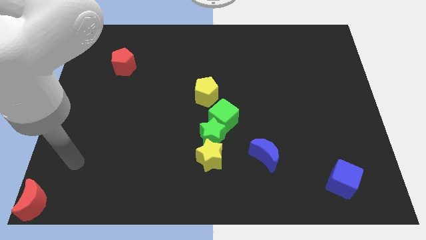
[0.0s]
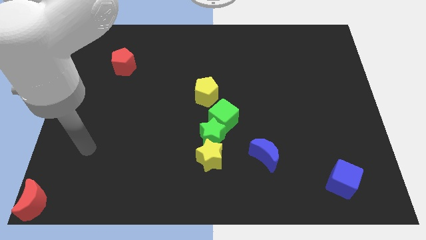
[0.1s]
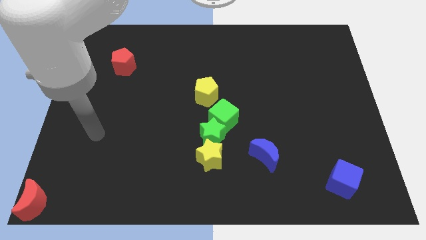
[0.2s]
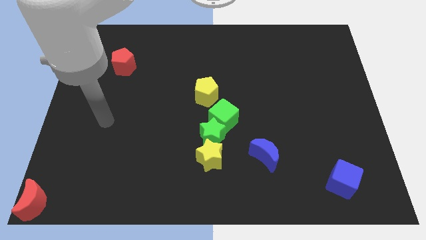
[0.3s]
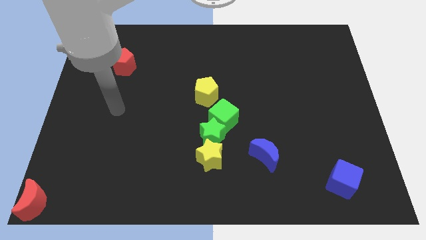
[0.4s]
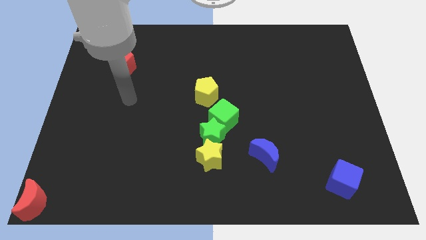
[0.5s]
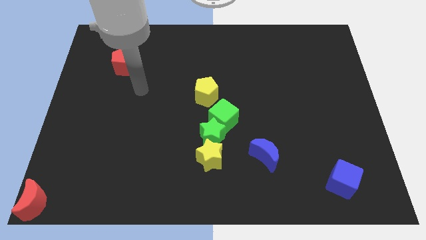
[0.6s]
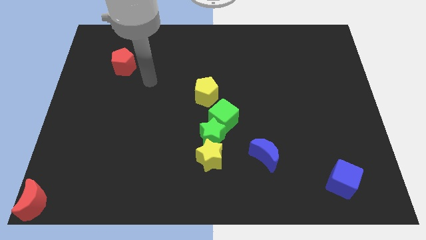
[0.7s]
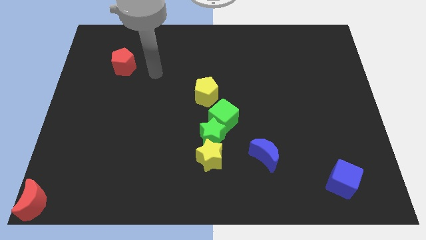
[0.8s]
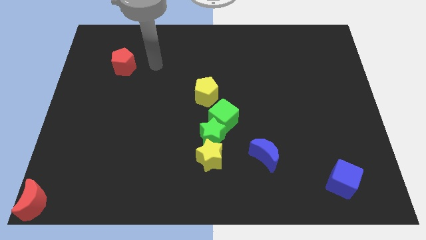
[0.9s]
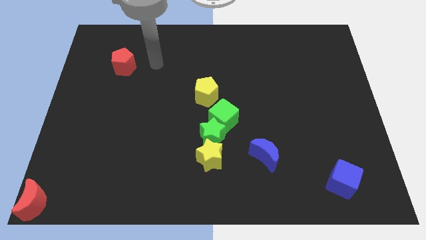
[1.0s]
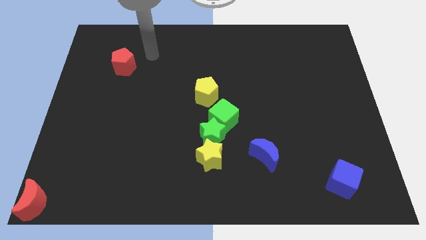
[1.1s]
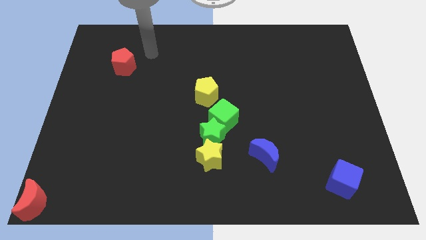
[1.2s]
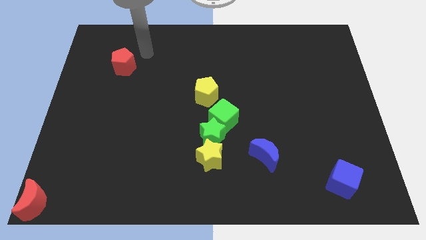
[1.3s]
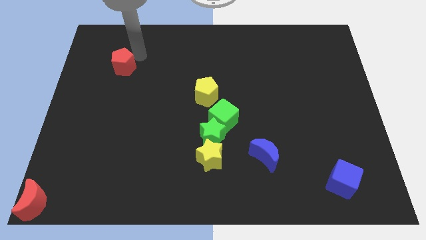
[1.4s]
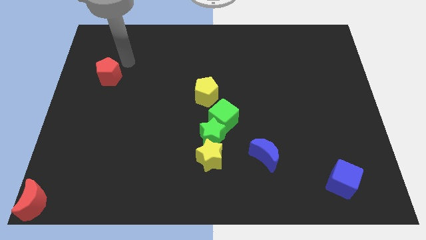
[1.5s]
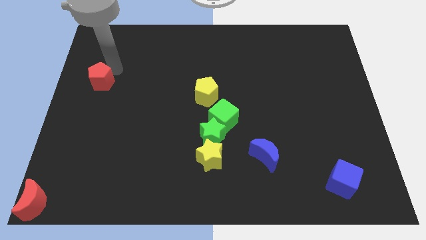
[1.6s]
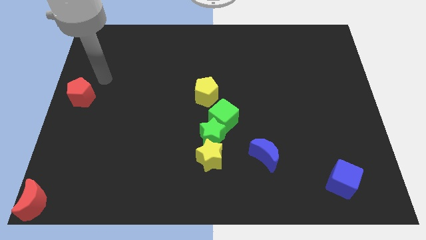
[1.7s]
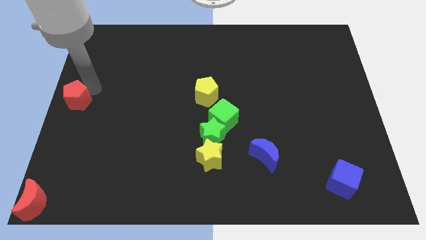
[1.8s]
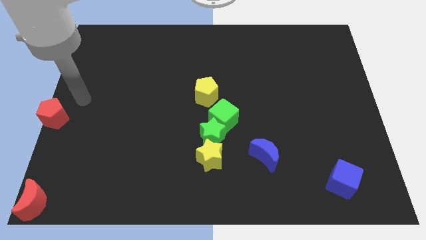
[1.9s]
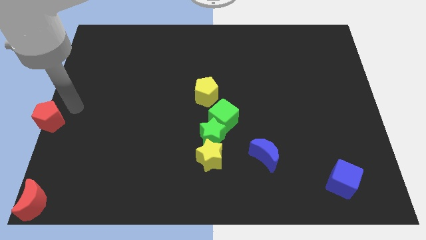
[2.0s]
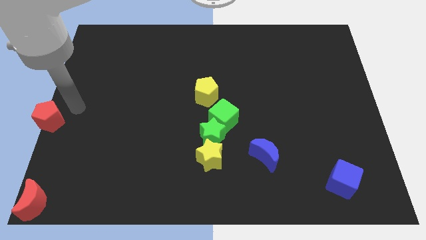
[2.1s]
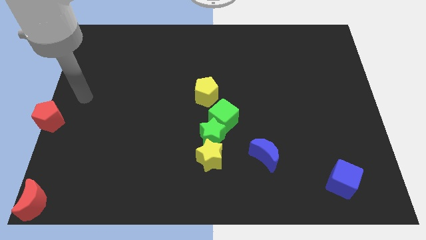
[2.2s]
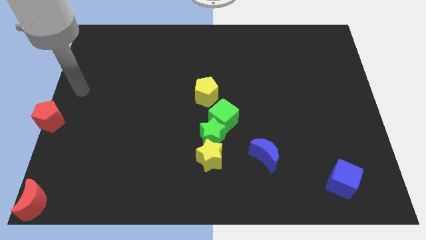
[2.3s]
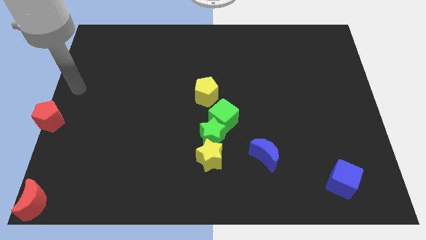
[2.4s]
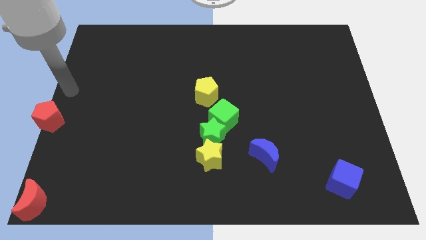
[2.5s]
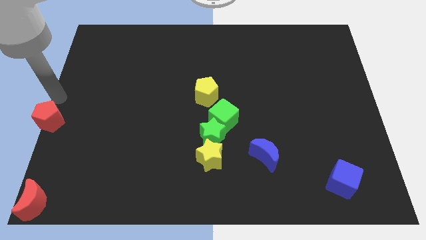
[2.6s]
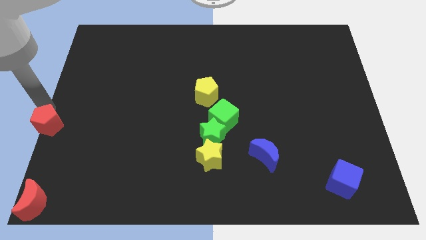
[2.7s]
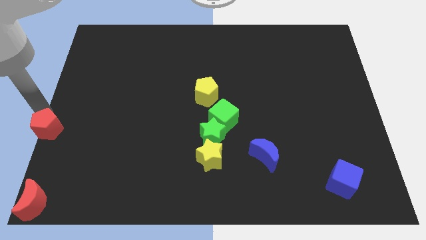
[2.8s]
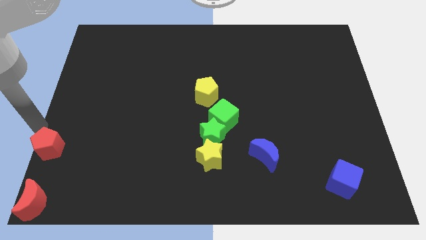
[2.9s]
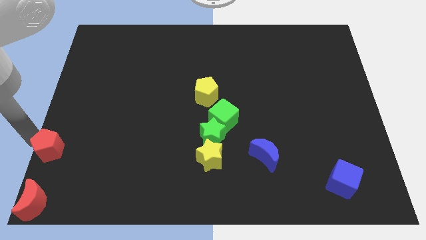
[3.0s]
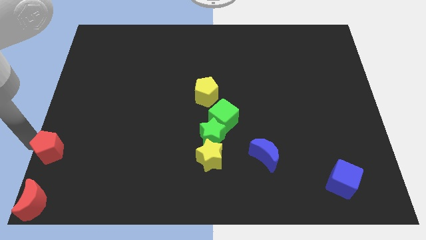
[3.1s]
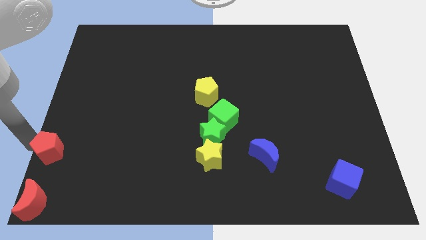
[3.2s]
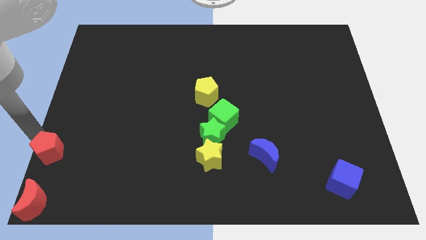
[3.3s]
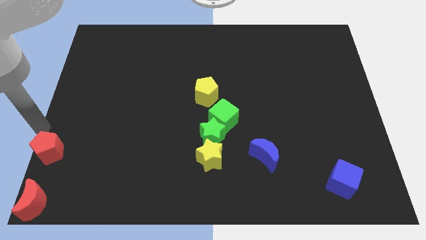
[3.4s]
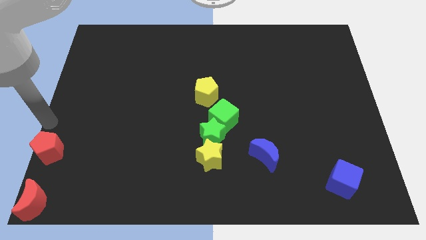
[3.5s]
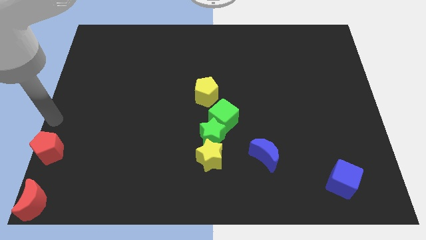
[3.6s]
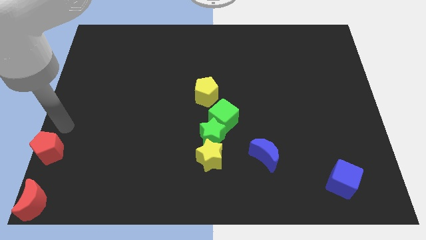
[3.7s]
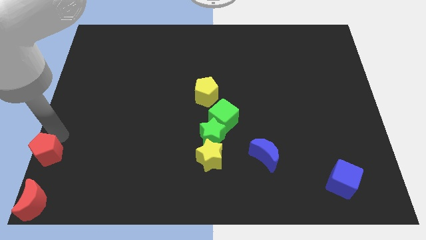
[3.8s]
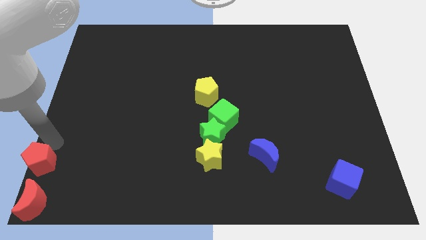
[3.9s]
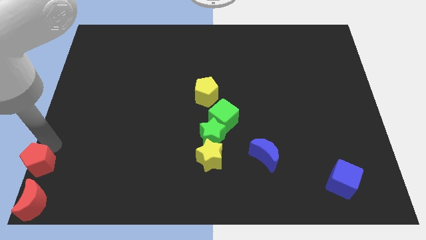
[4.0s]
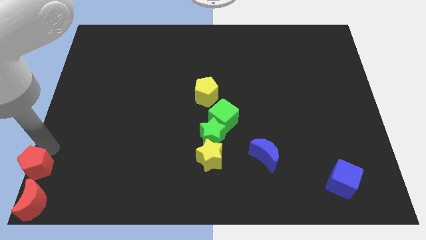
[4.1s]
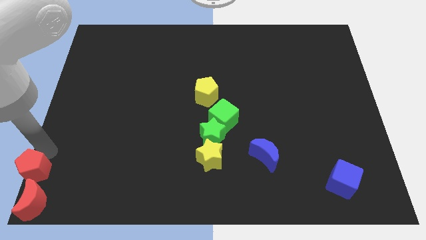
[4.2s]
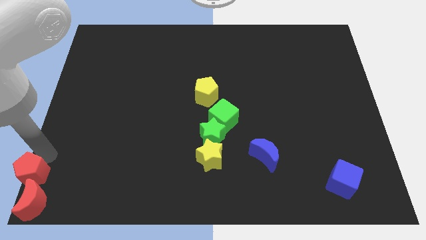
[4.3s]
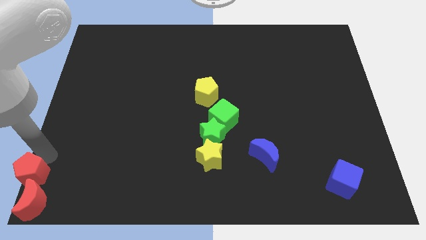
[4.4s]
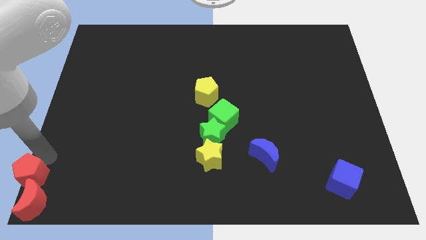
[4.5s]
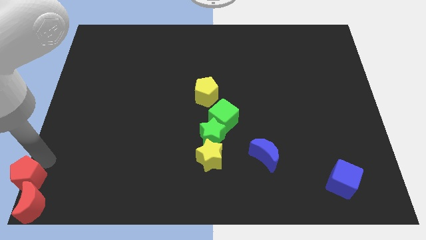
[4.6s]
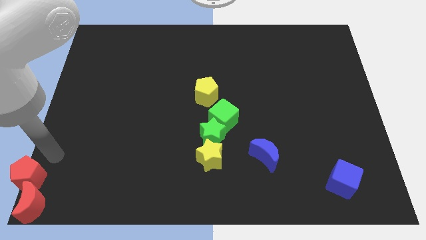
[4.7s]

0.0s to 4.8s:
drag the red pentagon into the top side of the red crescent

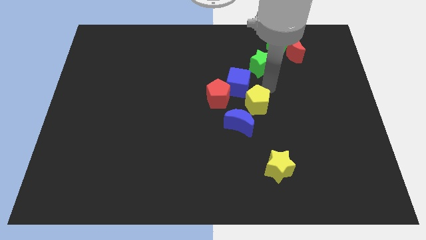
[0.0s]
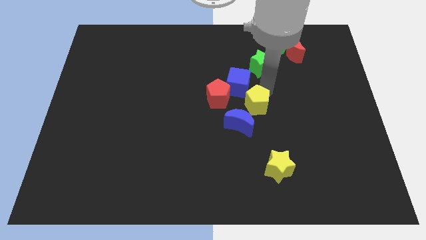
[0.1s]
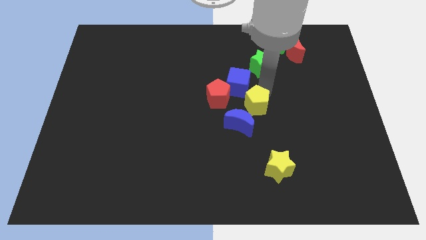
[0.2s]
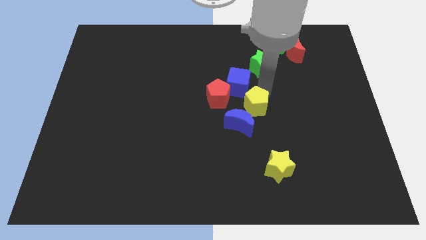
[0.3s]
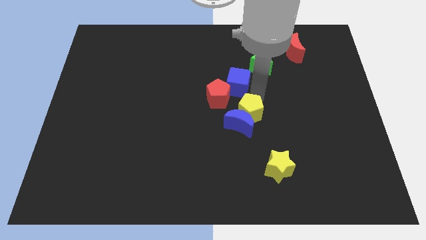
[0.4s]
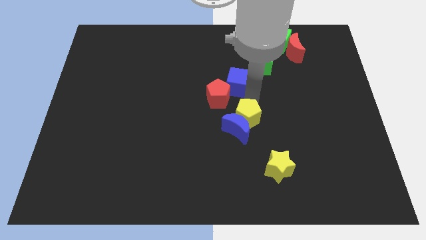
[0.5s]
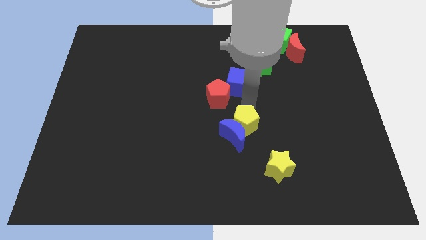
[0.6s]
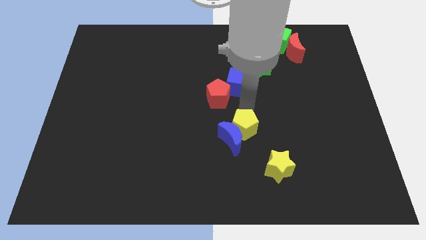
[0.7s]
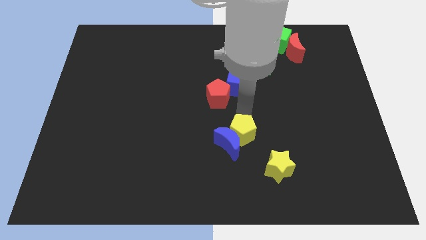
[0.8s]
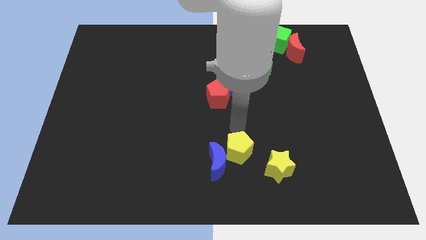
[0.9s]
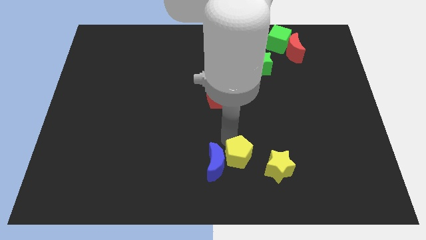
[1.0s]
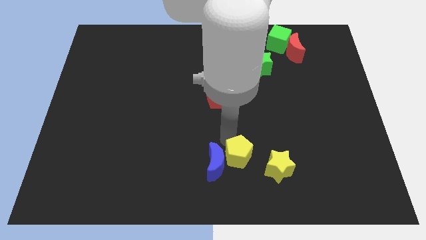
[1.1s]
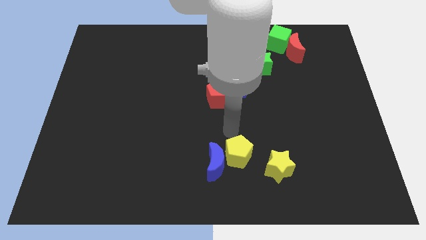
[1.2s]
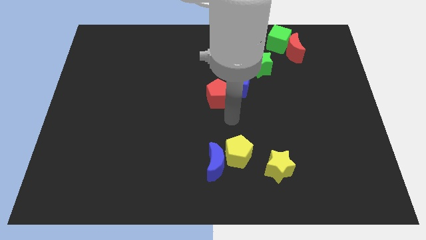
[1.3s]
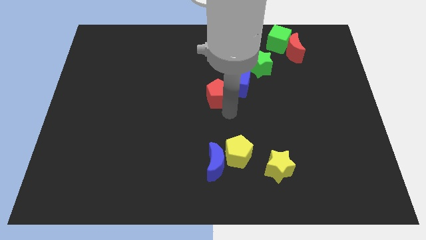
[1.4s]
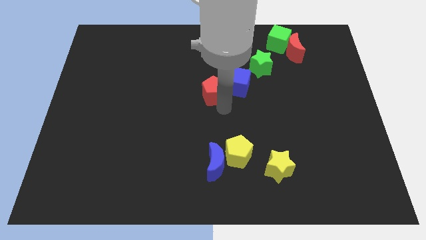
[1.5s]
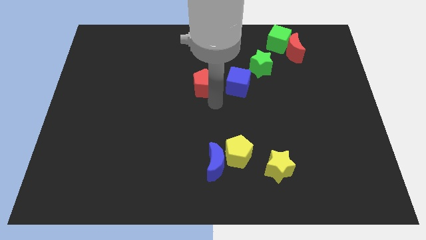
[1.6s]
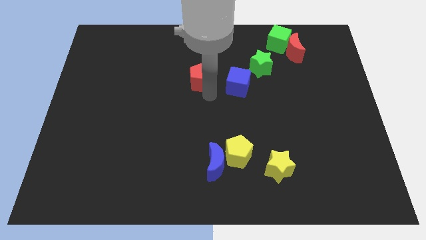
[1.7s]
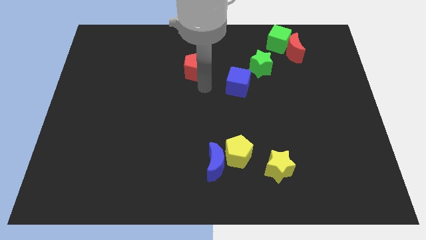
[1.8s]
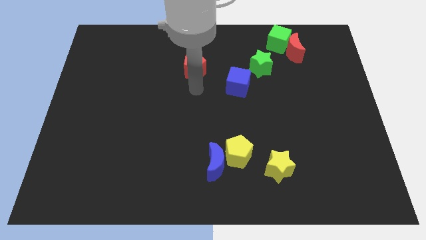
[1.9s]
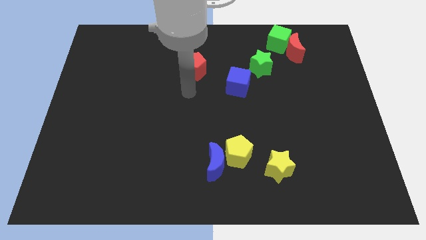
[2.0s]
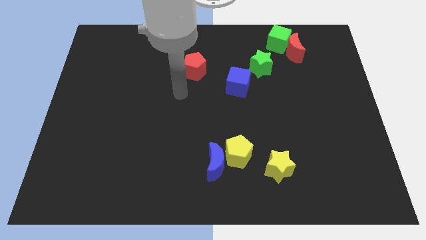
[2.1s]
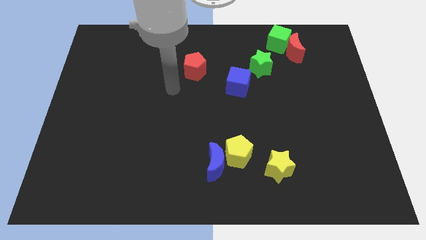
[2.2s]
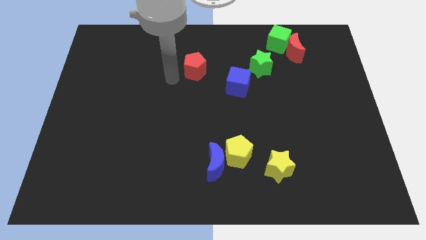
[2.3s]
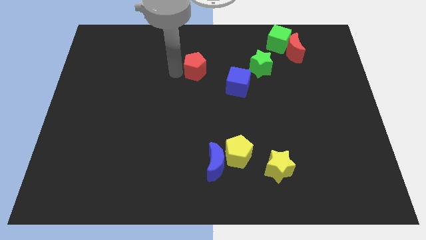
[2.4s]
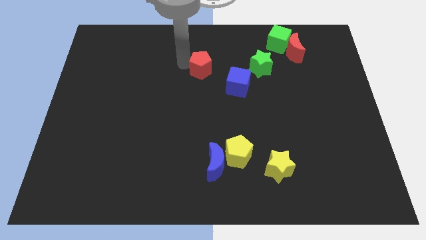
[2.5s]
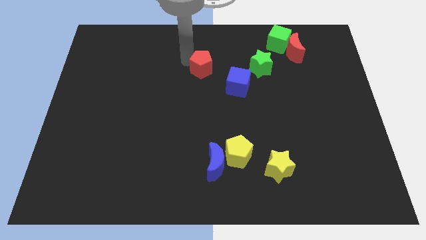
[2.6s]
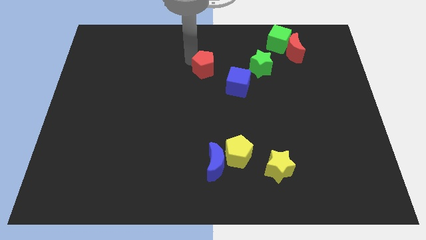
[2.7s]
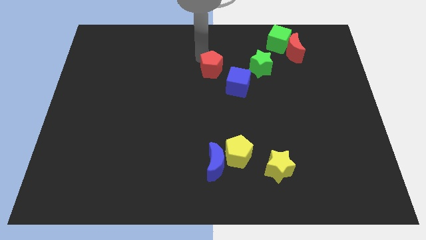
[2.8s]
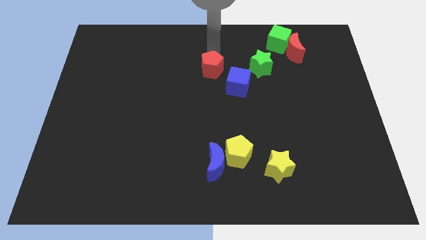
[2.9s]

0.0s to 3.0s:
push yellow pentagon along with blue moon slightly downwards

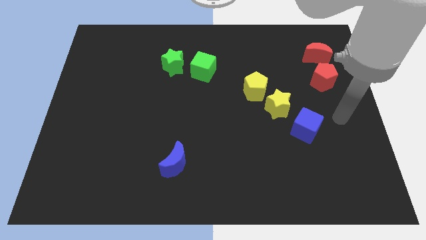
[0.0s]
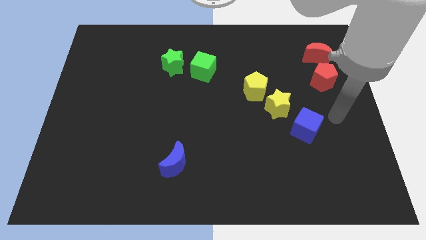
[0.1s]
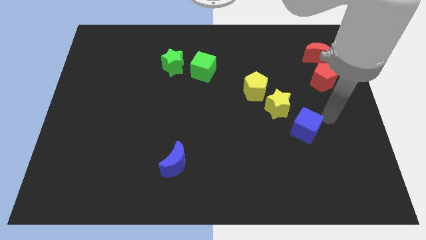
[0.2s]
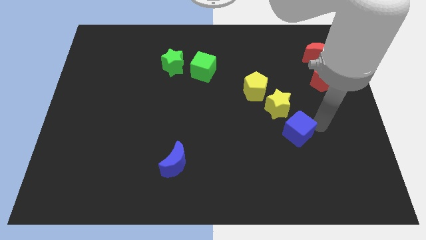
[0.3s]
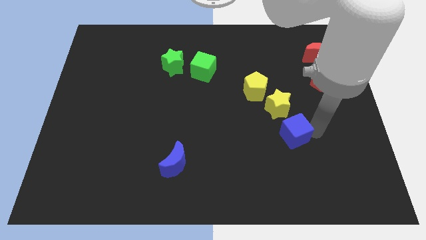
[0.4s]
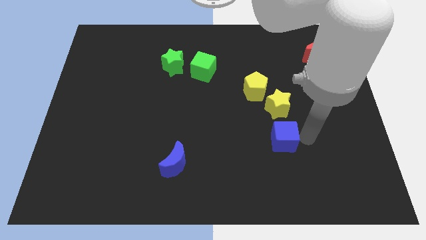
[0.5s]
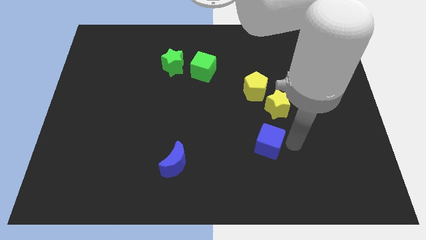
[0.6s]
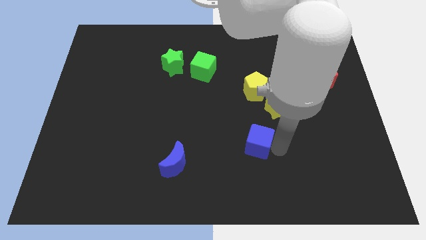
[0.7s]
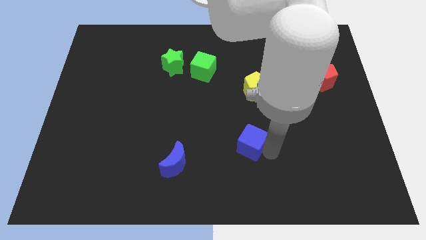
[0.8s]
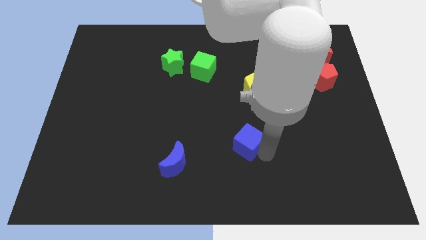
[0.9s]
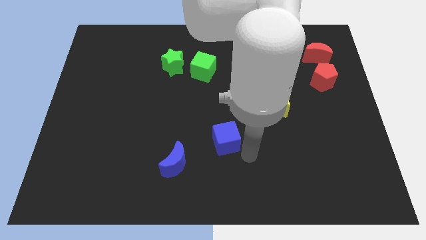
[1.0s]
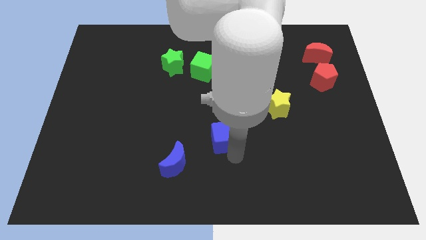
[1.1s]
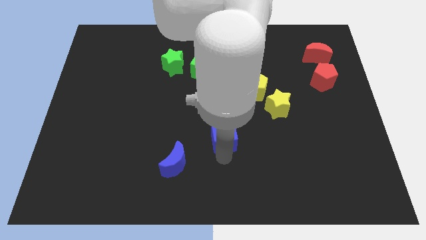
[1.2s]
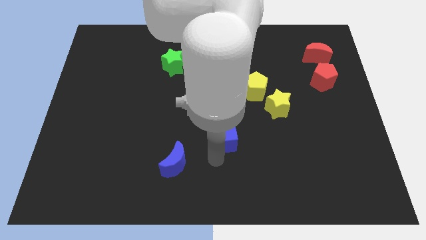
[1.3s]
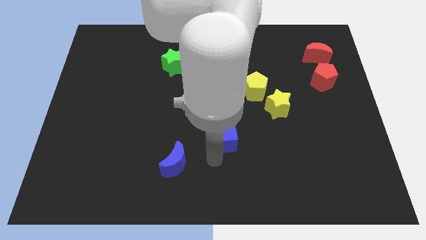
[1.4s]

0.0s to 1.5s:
place the blue cube in between blue crescent and yellow star
